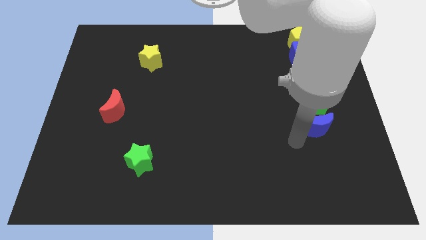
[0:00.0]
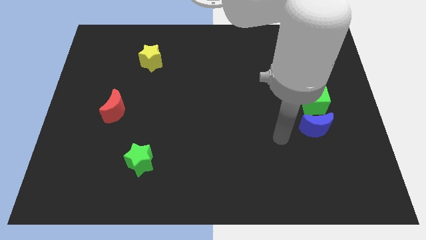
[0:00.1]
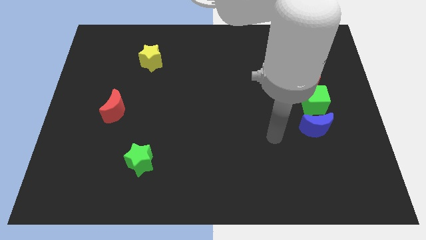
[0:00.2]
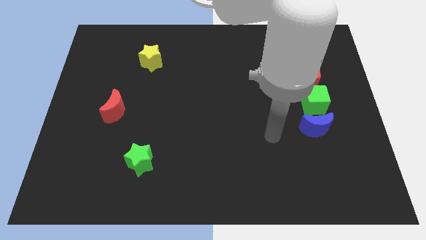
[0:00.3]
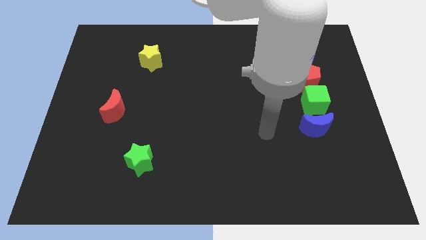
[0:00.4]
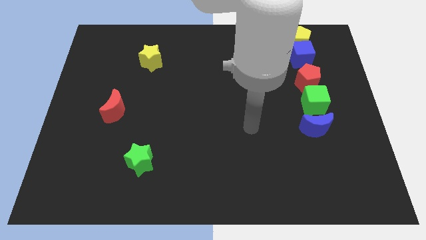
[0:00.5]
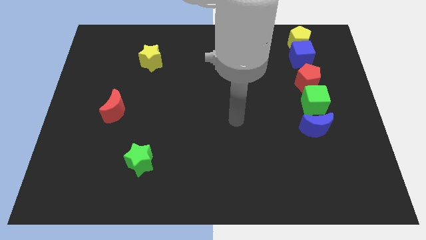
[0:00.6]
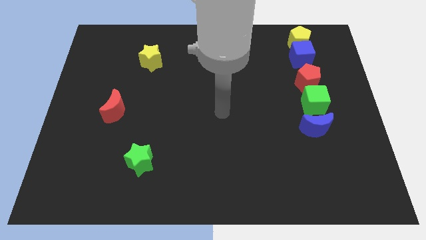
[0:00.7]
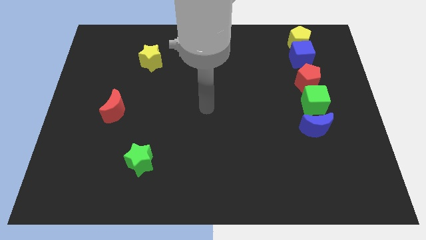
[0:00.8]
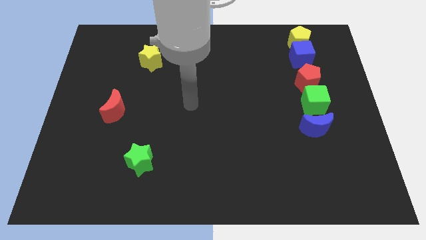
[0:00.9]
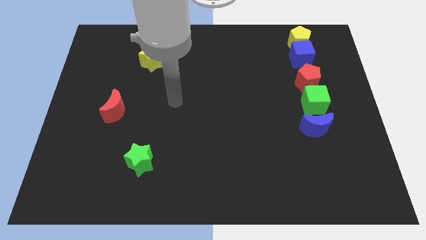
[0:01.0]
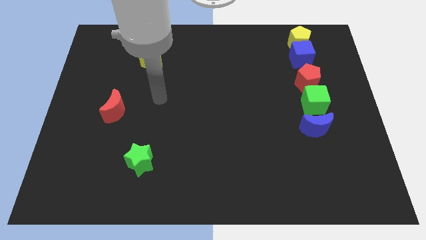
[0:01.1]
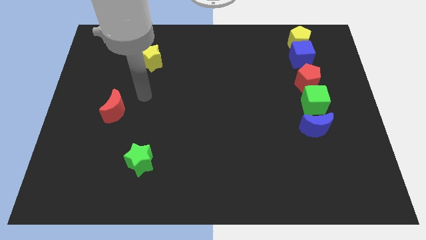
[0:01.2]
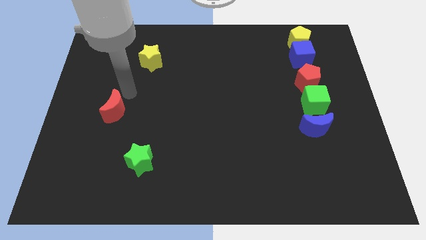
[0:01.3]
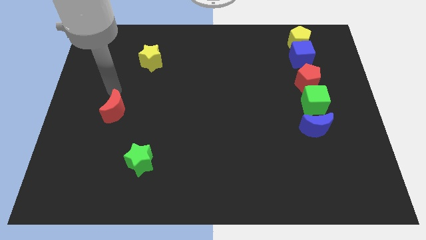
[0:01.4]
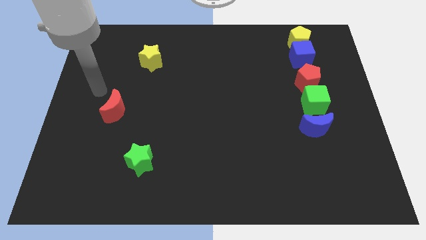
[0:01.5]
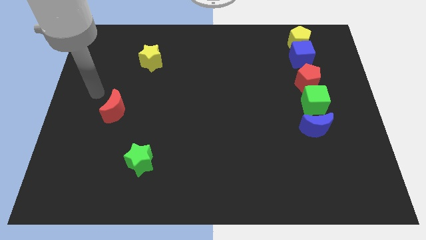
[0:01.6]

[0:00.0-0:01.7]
move your arm towards red crescent

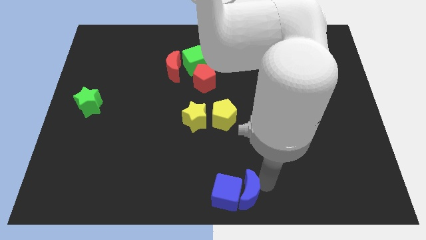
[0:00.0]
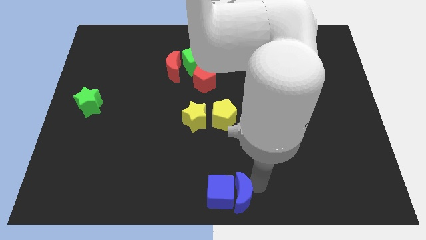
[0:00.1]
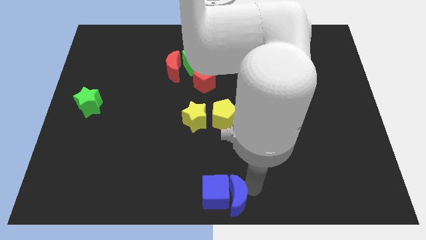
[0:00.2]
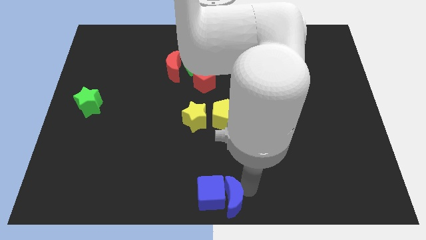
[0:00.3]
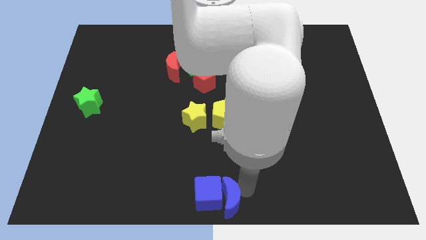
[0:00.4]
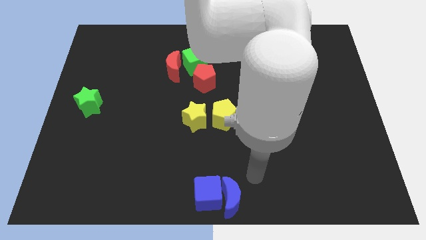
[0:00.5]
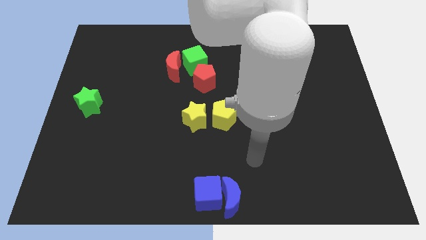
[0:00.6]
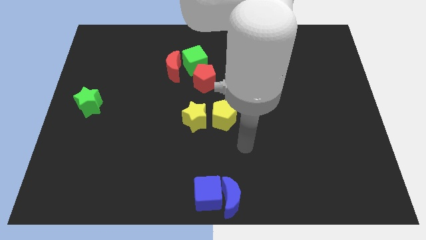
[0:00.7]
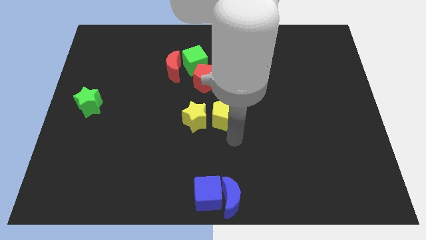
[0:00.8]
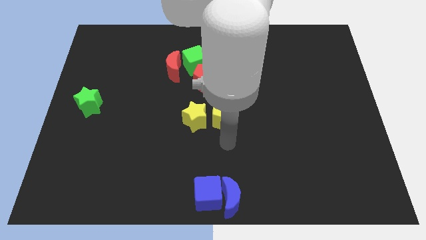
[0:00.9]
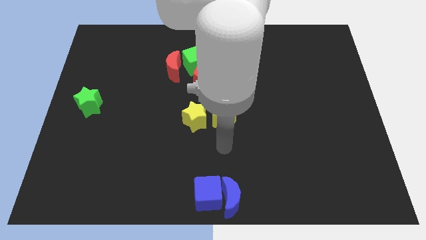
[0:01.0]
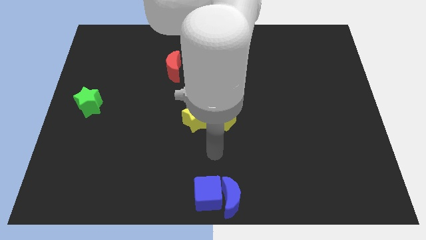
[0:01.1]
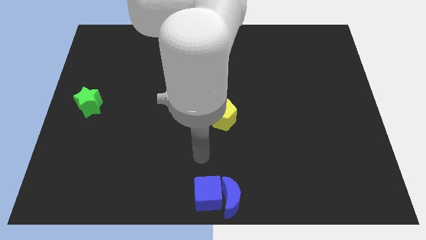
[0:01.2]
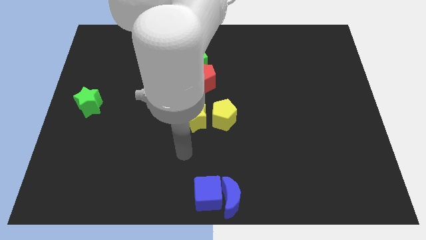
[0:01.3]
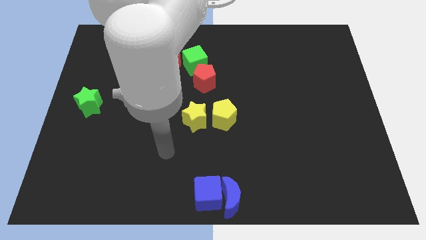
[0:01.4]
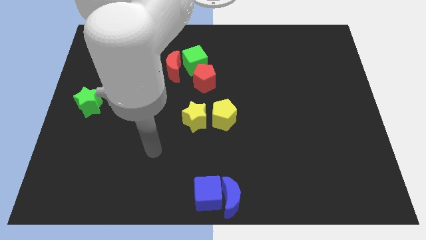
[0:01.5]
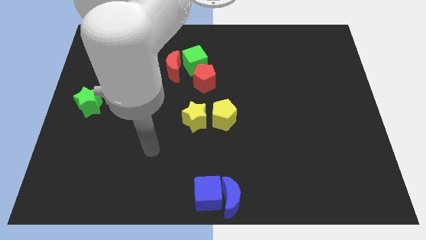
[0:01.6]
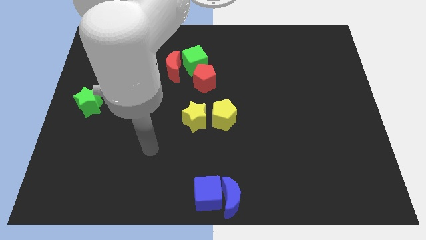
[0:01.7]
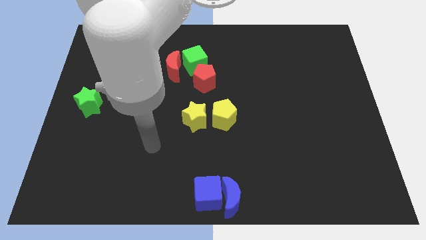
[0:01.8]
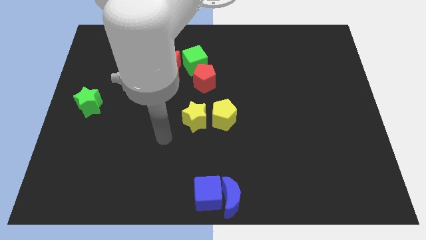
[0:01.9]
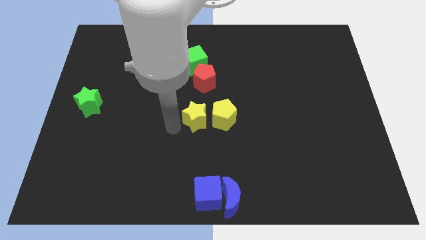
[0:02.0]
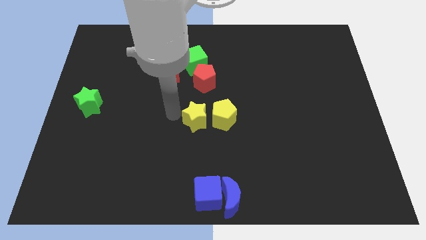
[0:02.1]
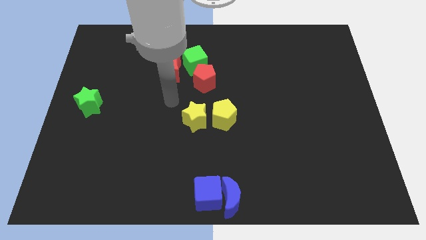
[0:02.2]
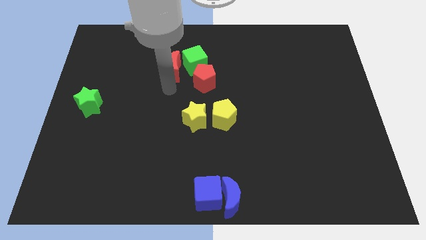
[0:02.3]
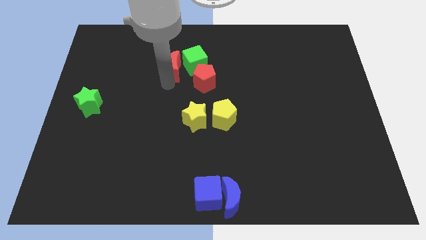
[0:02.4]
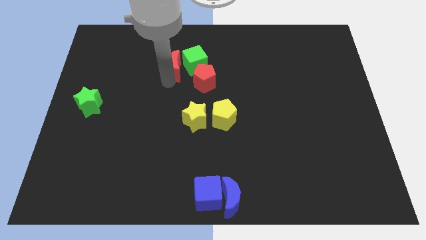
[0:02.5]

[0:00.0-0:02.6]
place your arm to the bottom of red moon

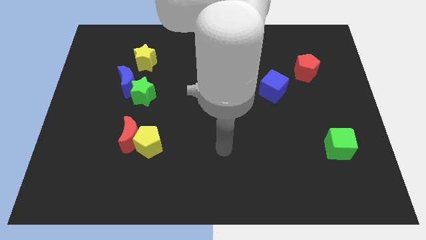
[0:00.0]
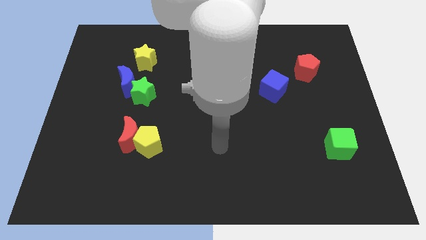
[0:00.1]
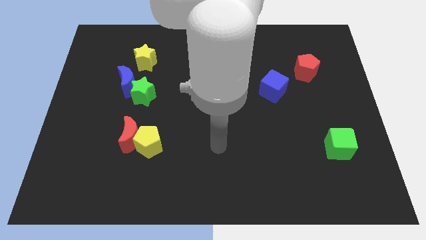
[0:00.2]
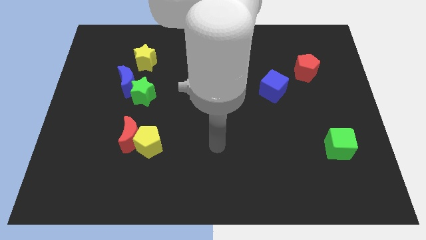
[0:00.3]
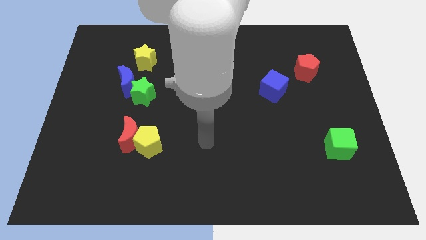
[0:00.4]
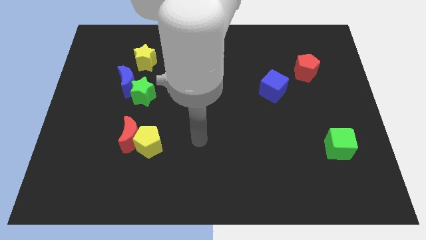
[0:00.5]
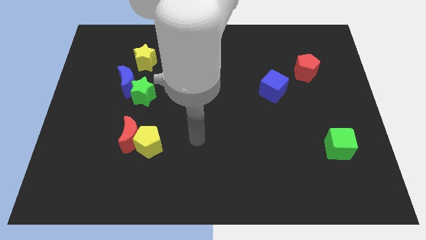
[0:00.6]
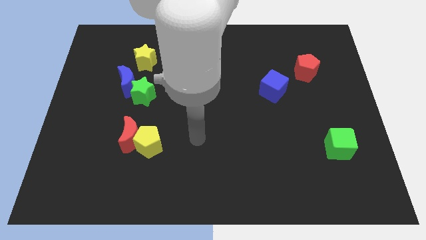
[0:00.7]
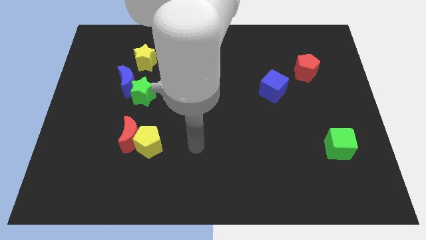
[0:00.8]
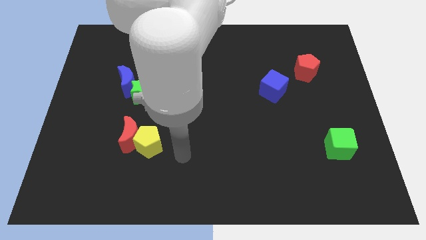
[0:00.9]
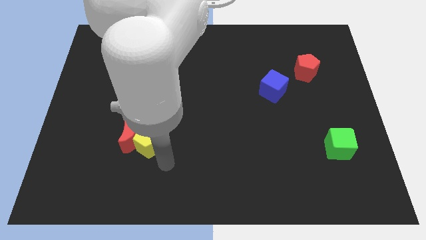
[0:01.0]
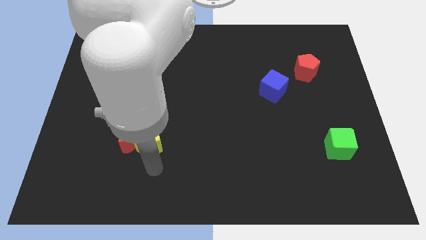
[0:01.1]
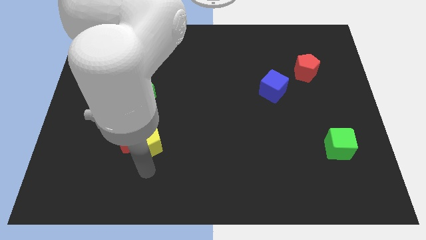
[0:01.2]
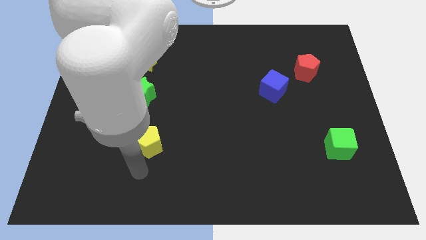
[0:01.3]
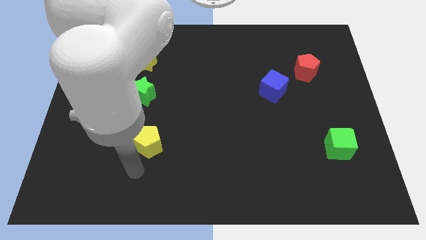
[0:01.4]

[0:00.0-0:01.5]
slide your hand towards the bottom side of the yellow pentagon

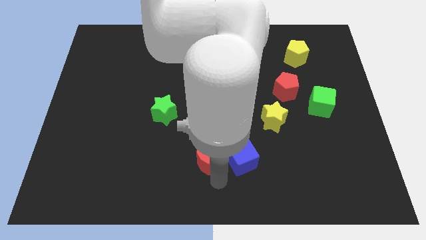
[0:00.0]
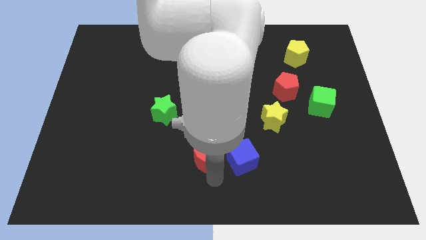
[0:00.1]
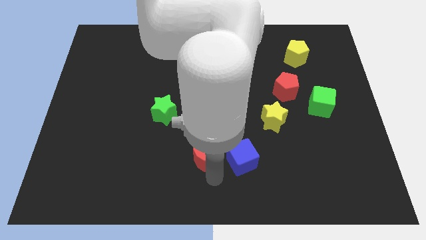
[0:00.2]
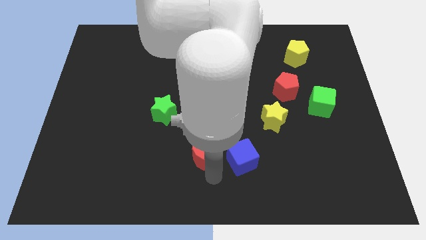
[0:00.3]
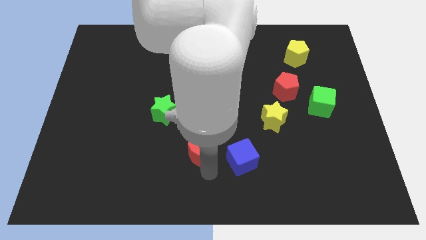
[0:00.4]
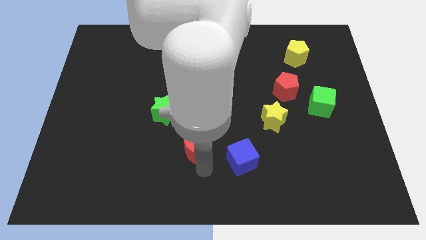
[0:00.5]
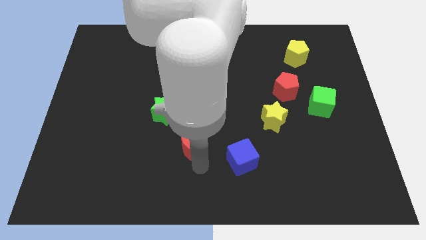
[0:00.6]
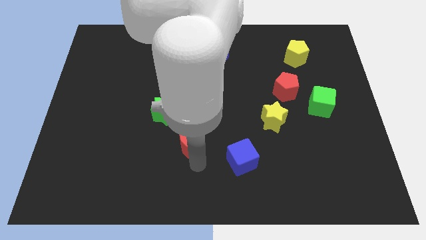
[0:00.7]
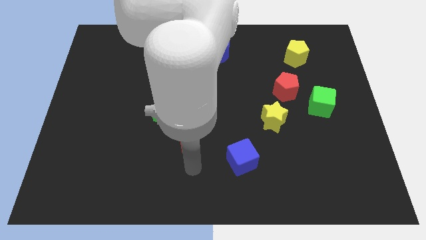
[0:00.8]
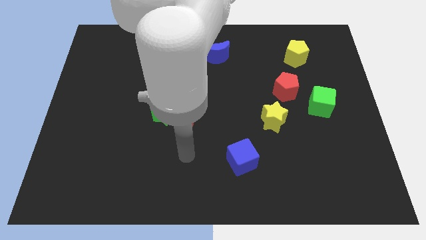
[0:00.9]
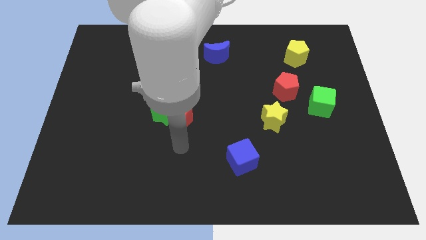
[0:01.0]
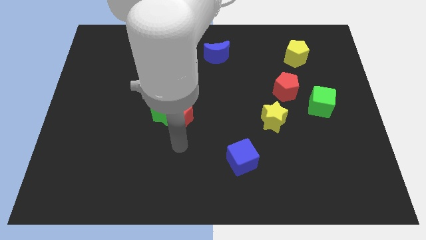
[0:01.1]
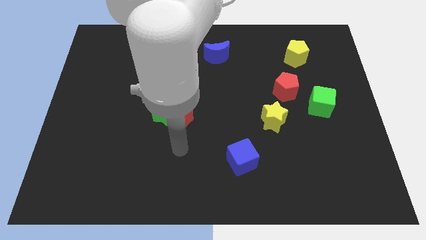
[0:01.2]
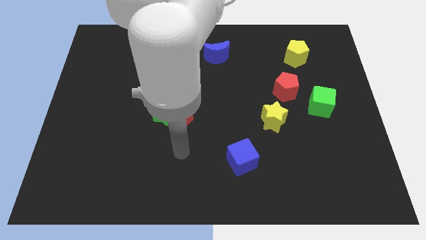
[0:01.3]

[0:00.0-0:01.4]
push red crescent to the right of green star

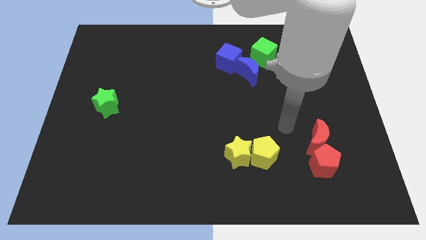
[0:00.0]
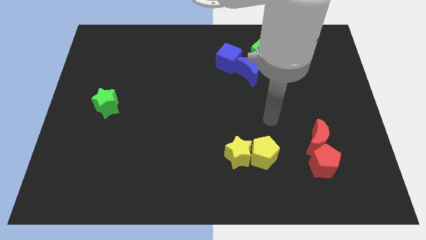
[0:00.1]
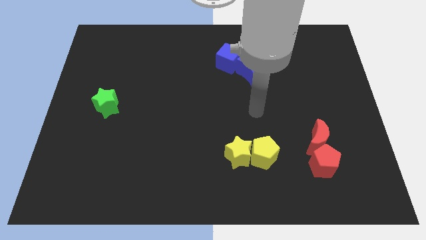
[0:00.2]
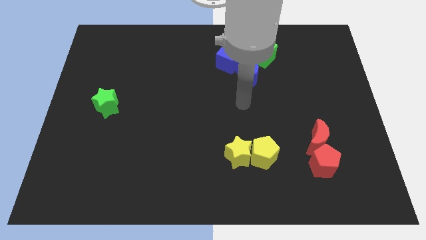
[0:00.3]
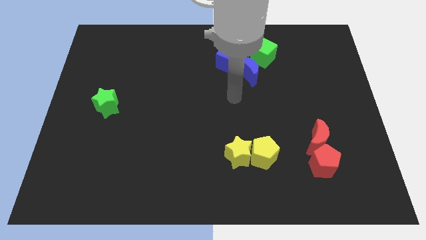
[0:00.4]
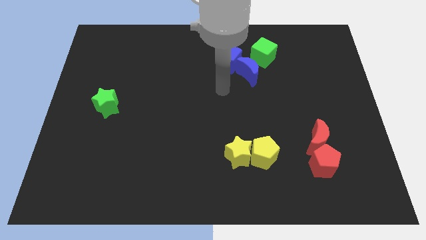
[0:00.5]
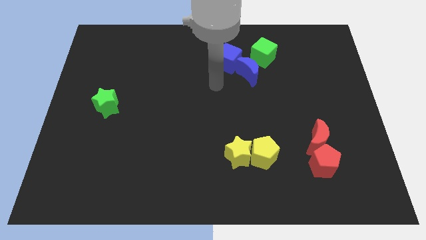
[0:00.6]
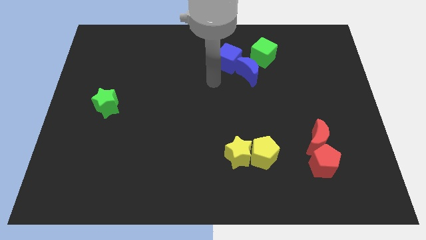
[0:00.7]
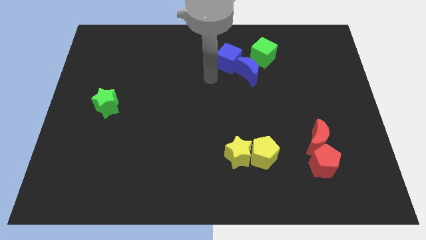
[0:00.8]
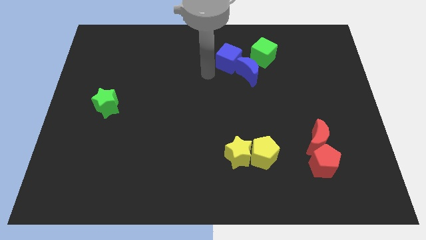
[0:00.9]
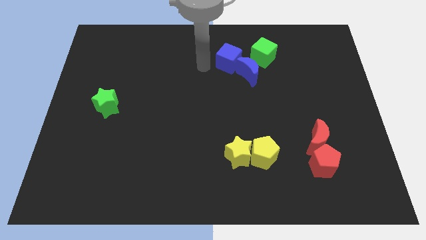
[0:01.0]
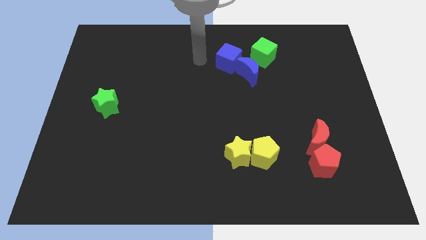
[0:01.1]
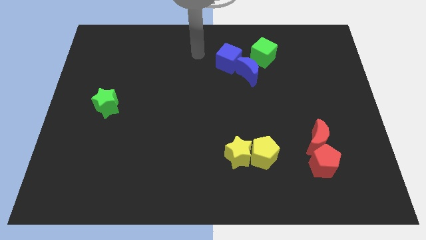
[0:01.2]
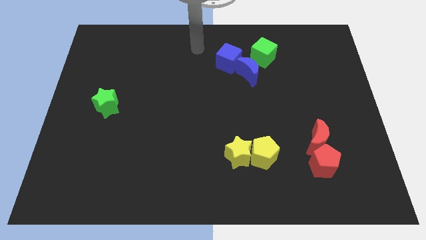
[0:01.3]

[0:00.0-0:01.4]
move the arm away from the red crescent and move the arm top middle of the table

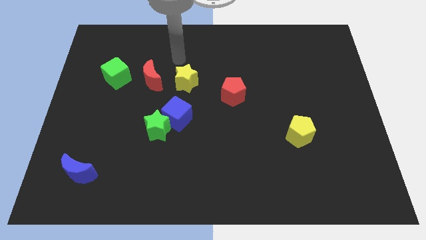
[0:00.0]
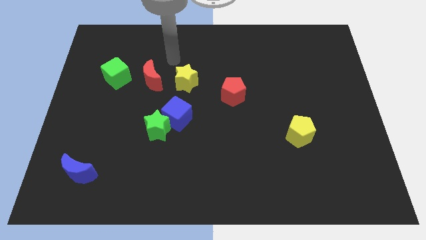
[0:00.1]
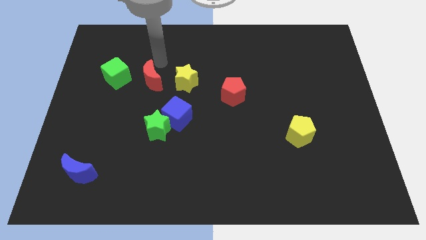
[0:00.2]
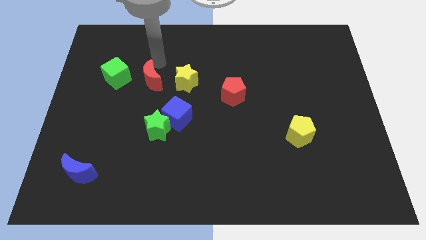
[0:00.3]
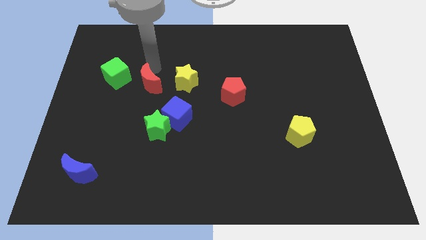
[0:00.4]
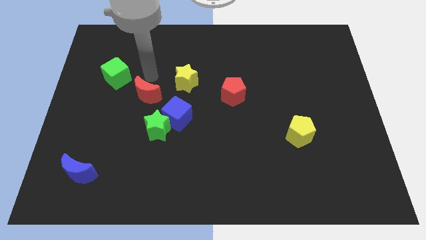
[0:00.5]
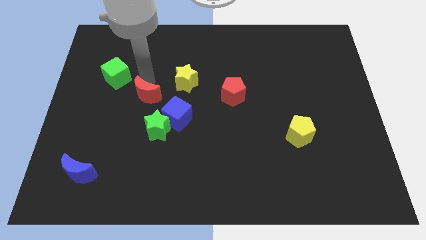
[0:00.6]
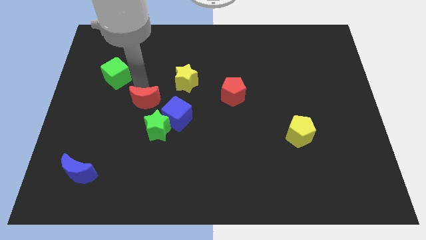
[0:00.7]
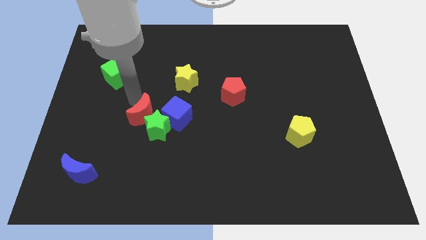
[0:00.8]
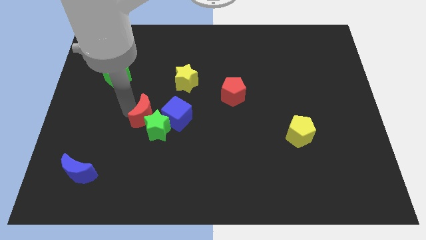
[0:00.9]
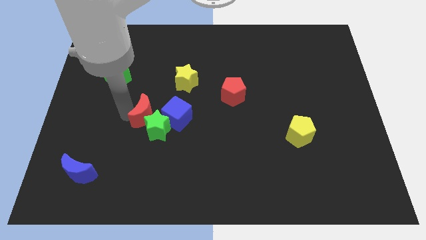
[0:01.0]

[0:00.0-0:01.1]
slide red moon into green star
